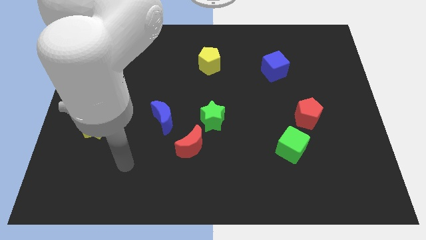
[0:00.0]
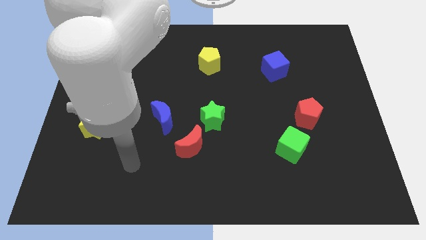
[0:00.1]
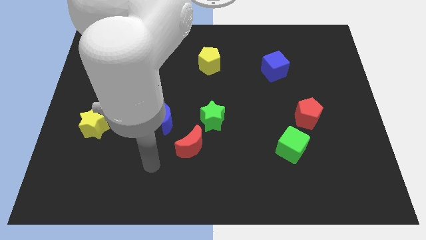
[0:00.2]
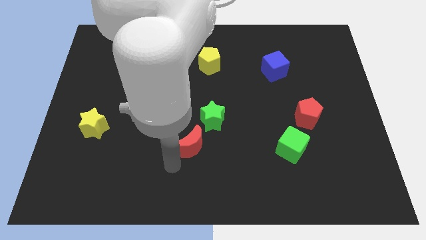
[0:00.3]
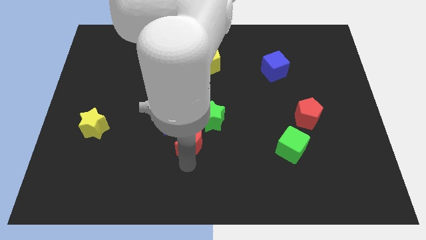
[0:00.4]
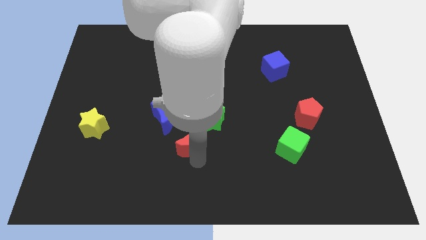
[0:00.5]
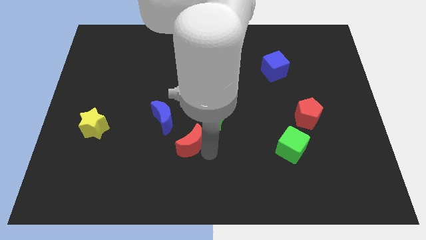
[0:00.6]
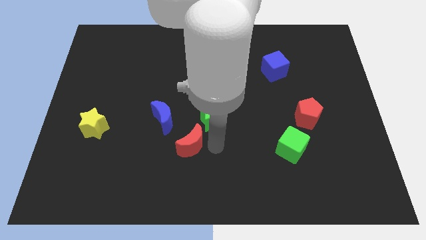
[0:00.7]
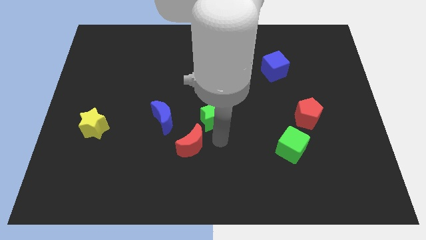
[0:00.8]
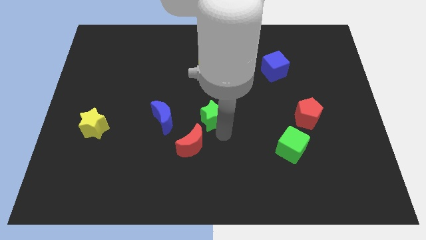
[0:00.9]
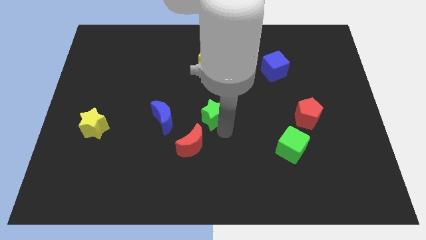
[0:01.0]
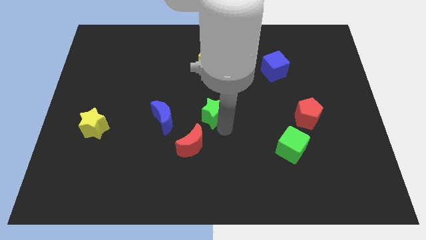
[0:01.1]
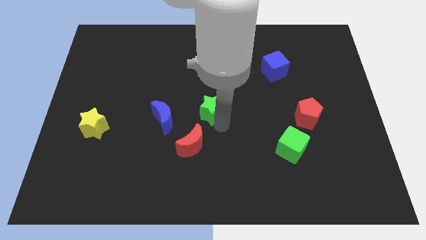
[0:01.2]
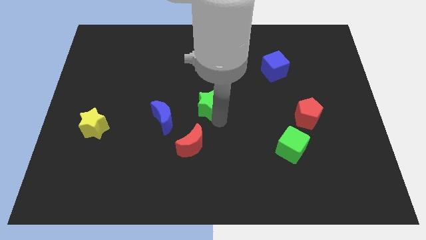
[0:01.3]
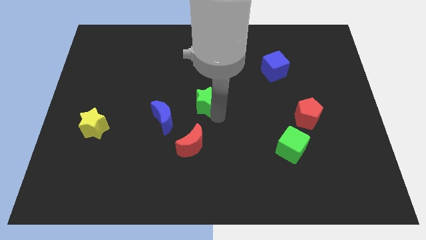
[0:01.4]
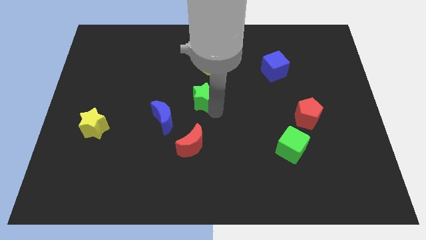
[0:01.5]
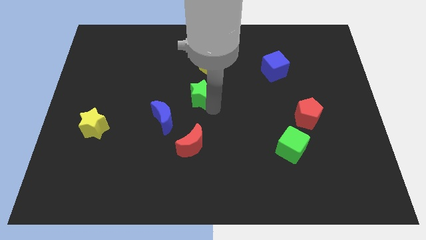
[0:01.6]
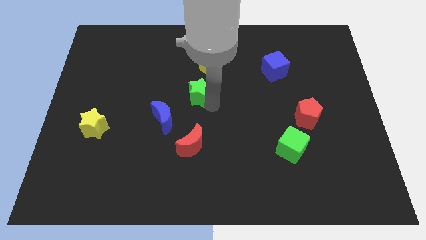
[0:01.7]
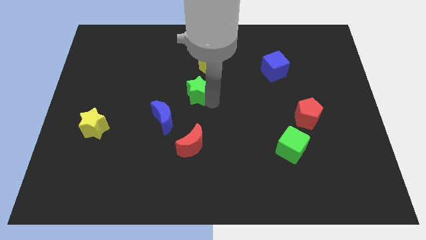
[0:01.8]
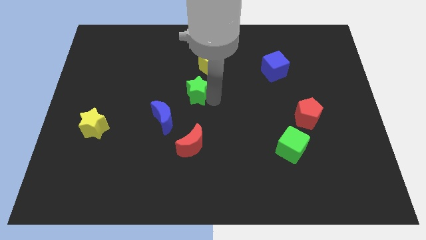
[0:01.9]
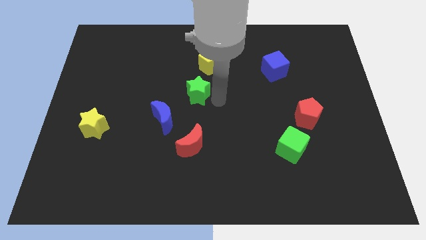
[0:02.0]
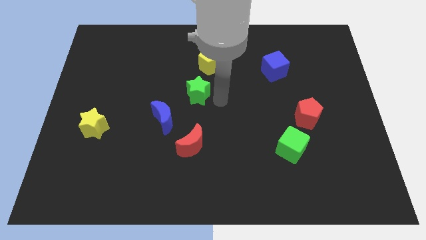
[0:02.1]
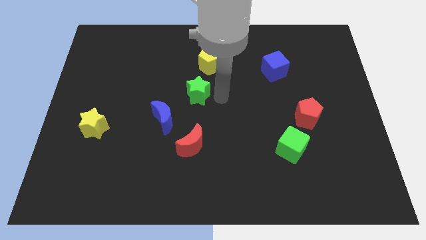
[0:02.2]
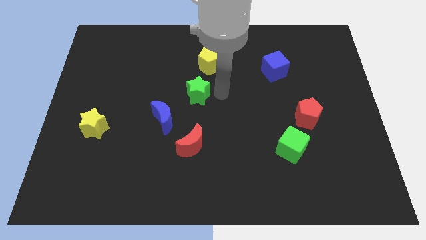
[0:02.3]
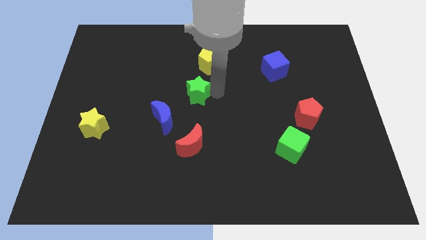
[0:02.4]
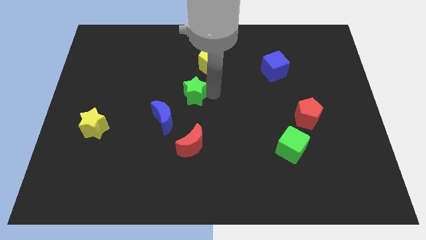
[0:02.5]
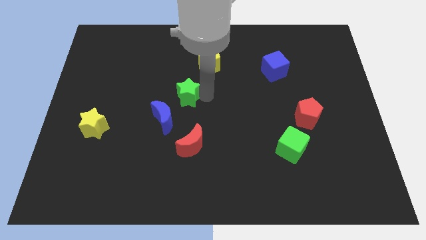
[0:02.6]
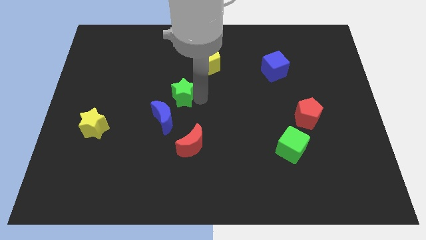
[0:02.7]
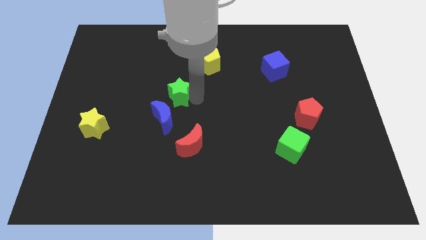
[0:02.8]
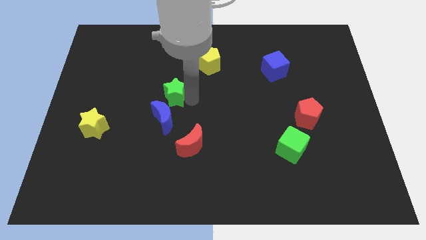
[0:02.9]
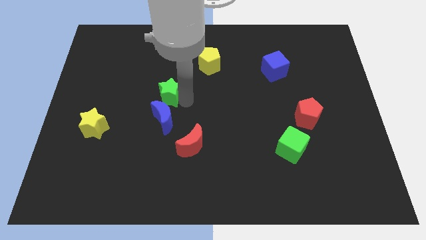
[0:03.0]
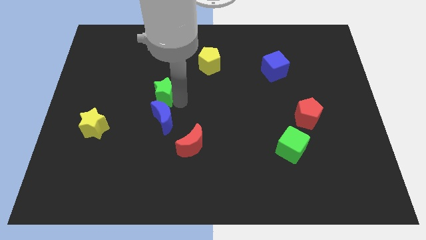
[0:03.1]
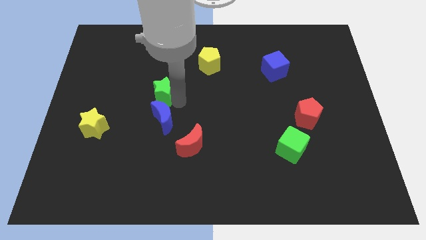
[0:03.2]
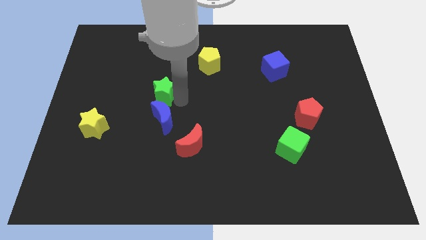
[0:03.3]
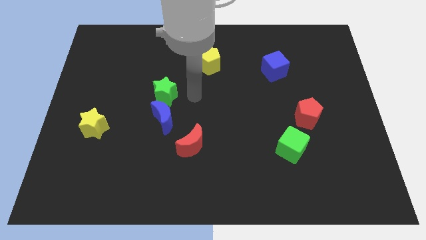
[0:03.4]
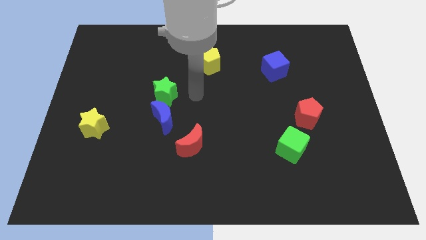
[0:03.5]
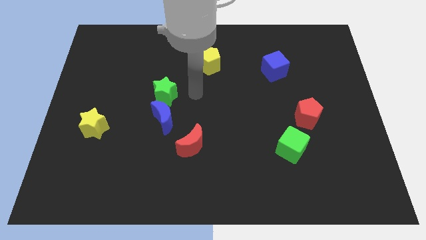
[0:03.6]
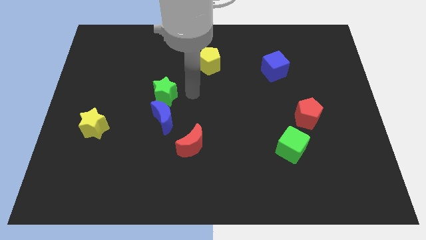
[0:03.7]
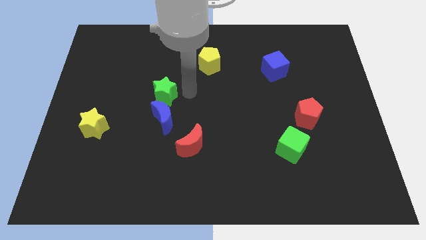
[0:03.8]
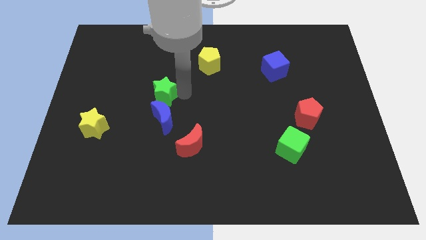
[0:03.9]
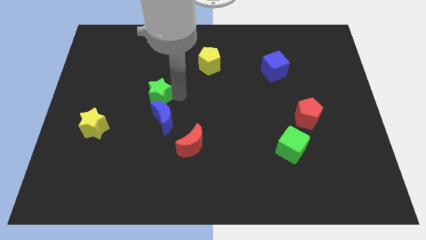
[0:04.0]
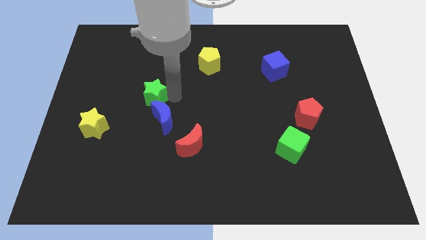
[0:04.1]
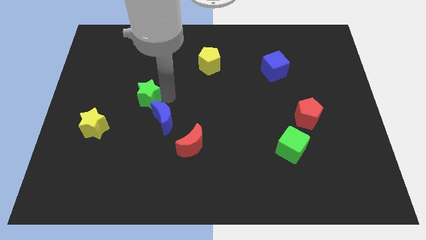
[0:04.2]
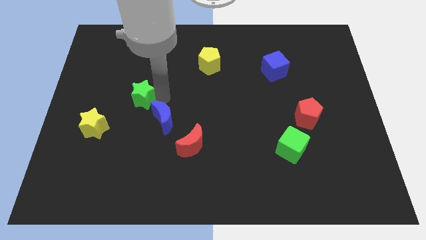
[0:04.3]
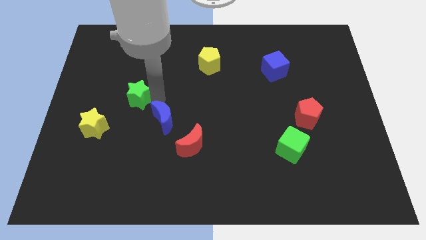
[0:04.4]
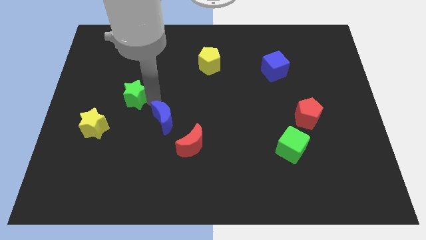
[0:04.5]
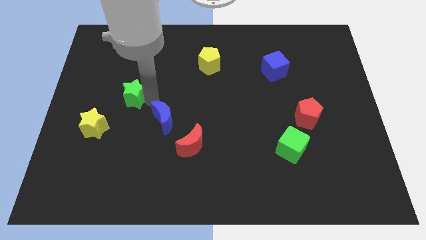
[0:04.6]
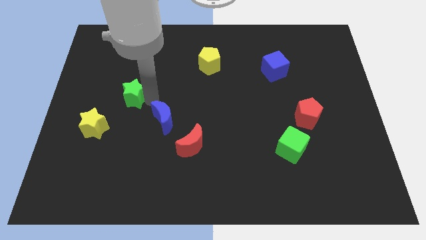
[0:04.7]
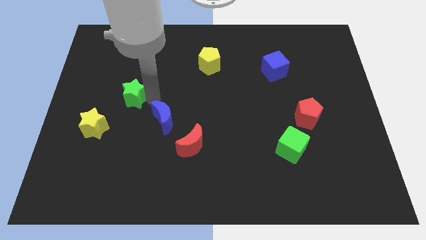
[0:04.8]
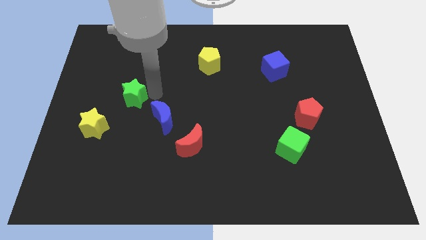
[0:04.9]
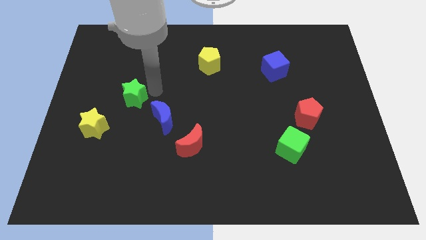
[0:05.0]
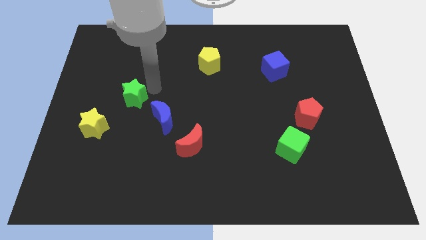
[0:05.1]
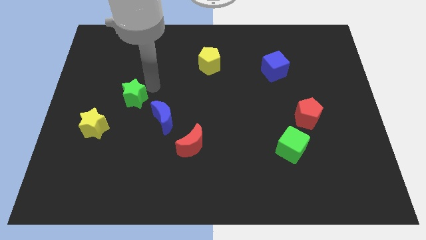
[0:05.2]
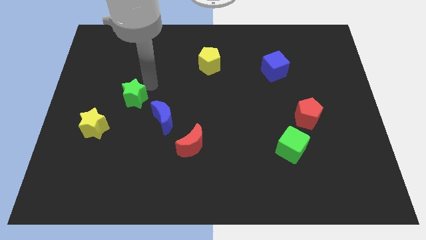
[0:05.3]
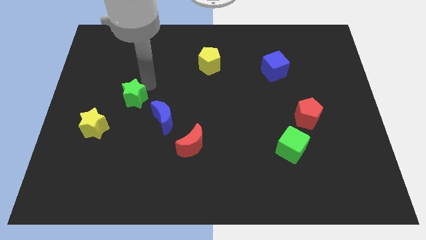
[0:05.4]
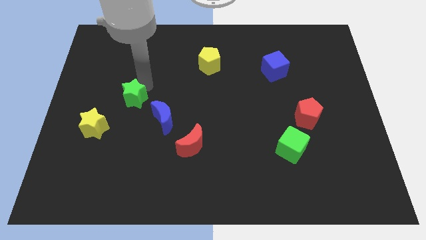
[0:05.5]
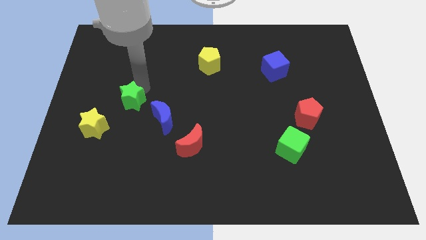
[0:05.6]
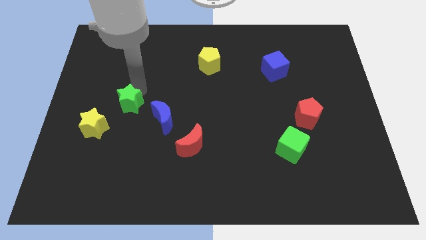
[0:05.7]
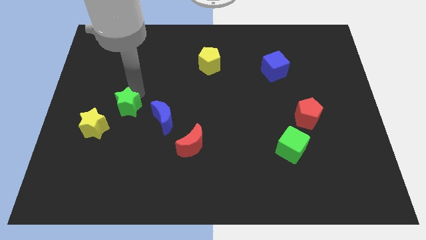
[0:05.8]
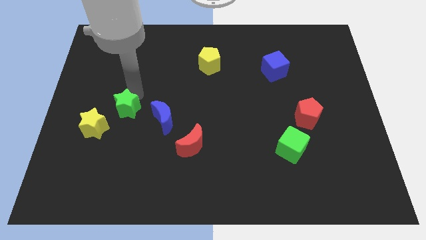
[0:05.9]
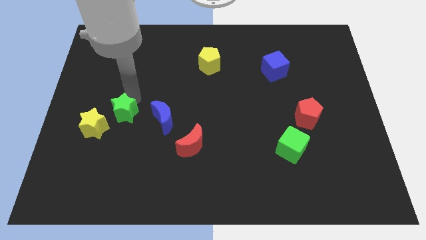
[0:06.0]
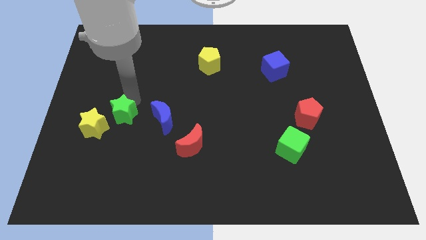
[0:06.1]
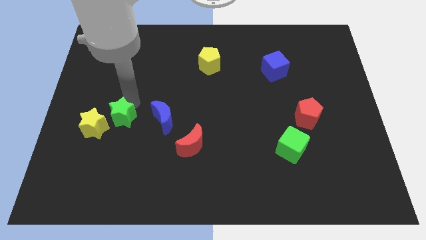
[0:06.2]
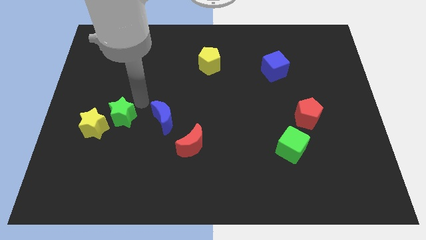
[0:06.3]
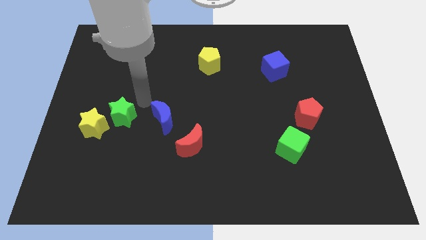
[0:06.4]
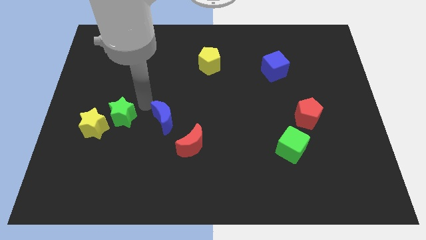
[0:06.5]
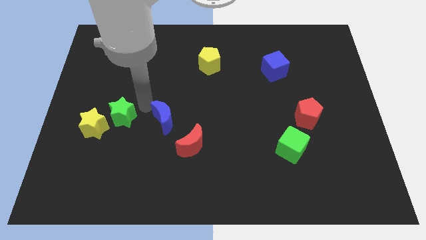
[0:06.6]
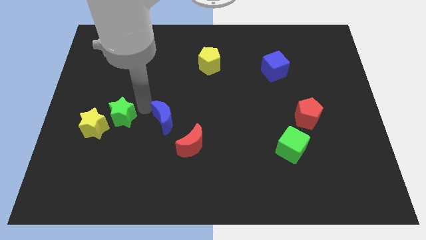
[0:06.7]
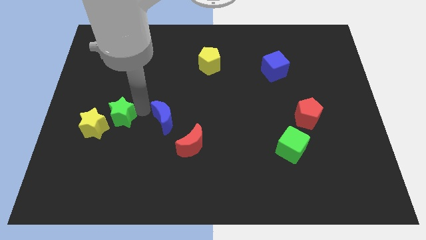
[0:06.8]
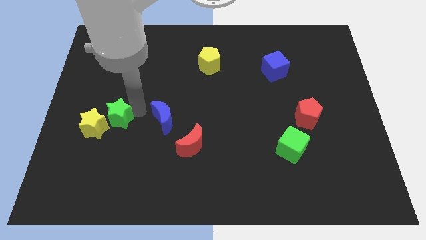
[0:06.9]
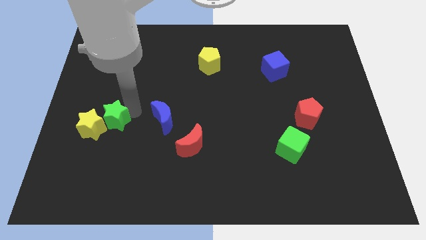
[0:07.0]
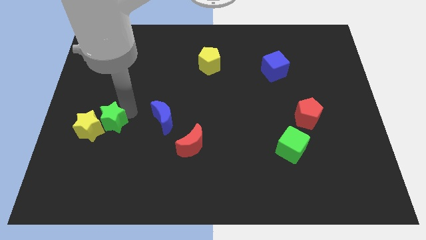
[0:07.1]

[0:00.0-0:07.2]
move the green star next to the yellow star

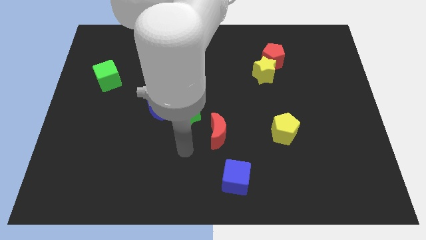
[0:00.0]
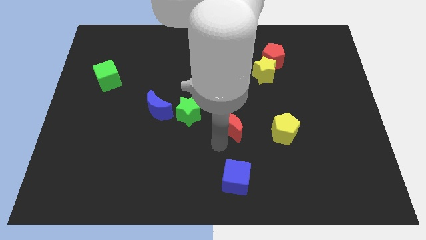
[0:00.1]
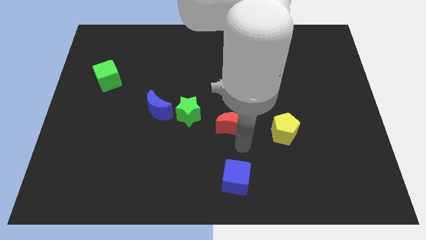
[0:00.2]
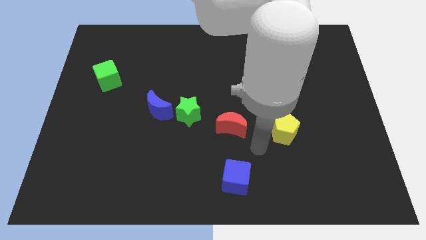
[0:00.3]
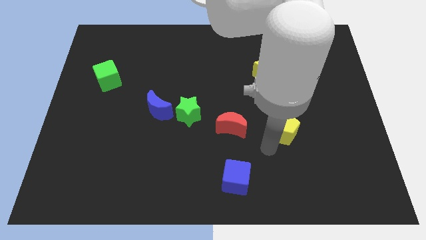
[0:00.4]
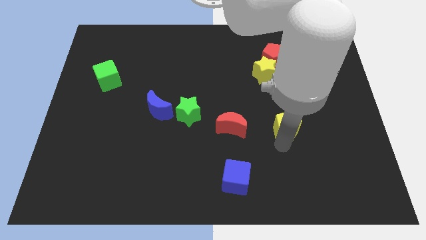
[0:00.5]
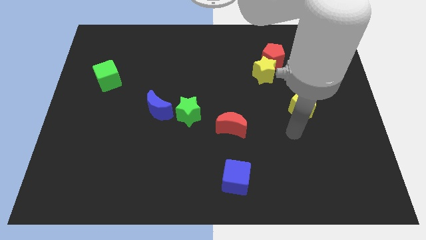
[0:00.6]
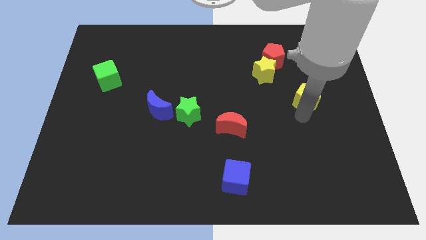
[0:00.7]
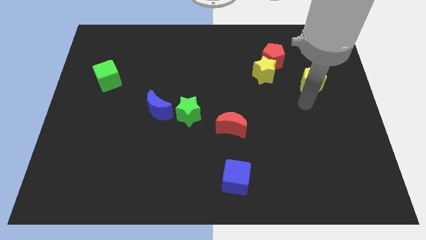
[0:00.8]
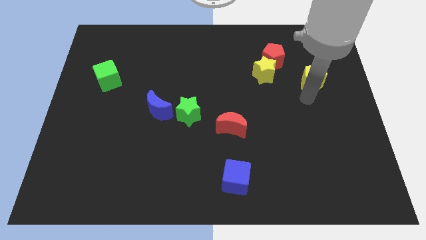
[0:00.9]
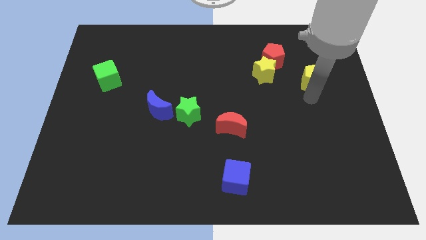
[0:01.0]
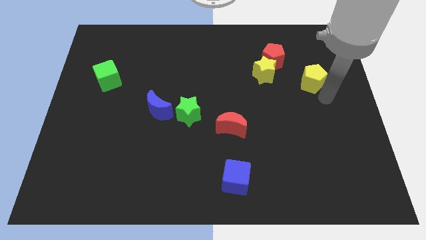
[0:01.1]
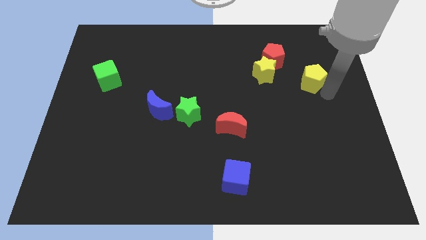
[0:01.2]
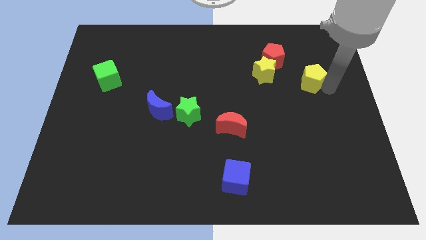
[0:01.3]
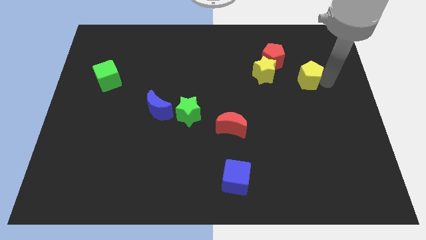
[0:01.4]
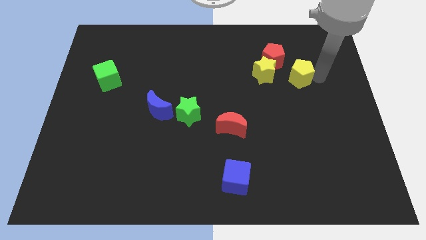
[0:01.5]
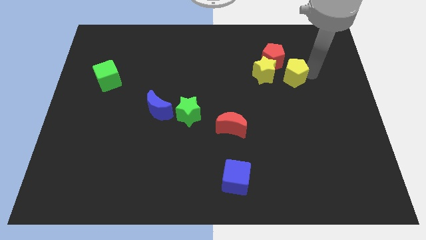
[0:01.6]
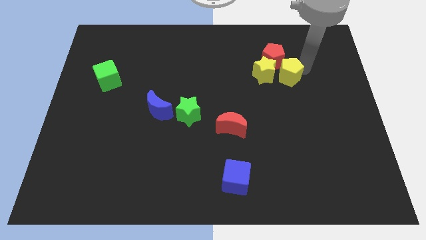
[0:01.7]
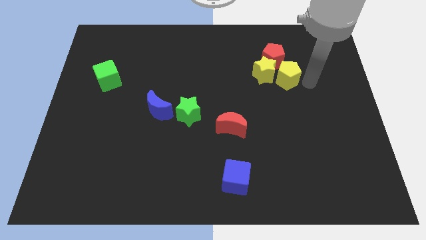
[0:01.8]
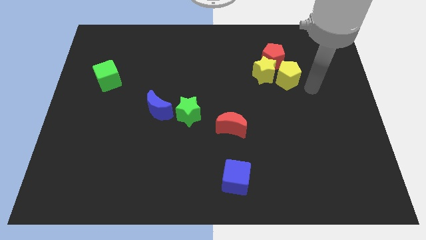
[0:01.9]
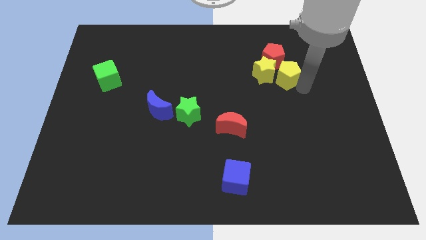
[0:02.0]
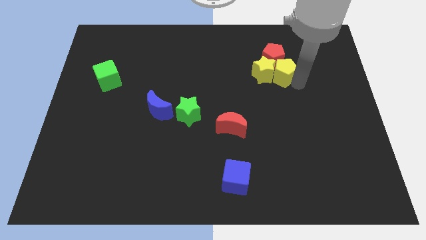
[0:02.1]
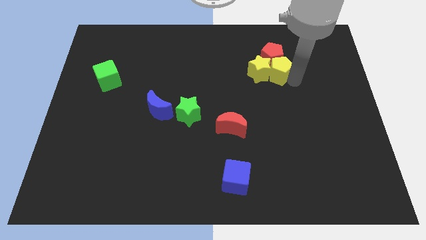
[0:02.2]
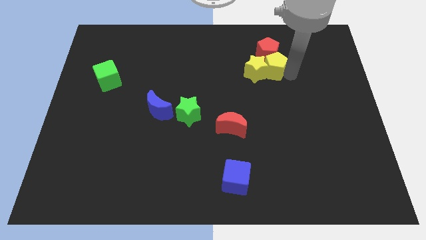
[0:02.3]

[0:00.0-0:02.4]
move the yellow pentagon to the red pentagon
